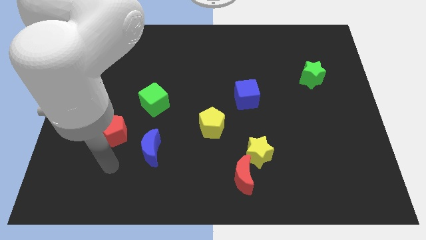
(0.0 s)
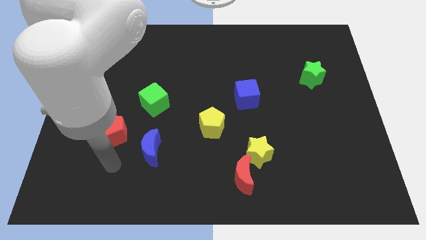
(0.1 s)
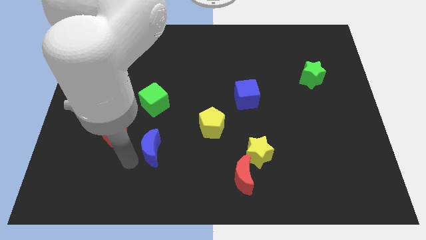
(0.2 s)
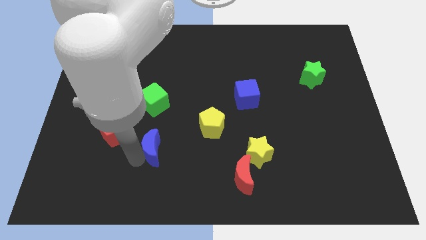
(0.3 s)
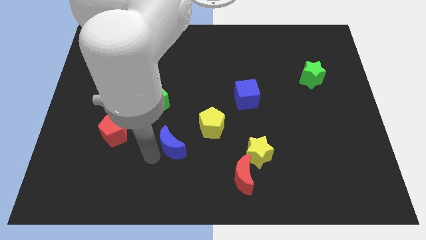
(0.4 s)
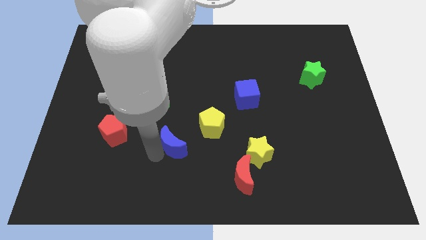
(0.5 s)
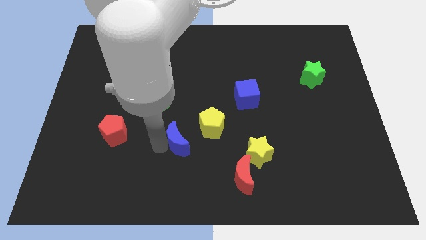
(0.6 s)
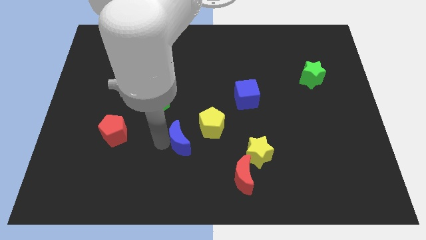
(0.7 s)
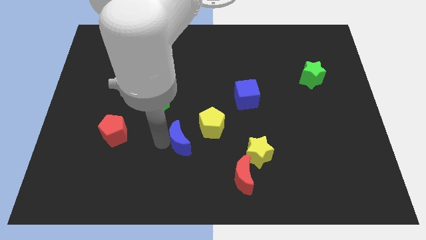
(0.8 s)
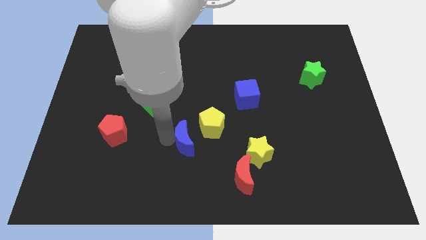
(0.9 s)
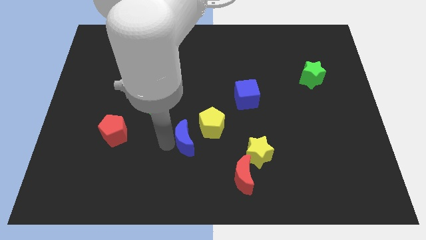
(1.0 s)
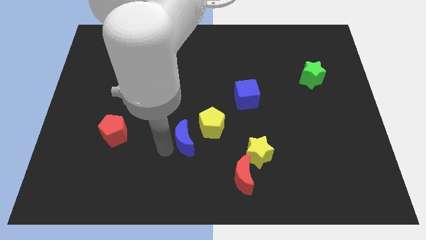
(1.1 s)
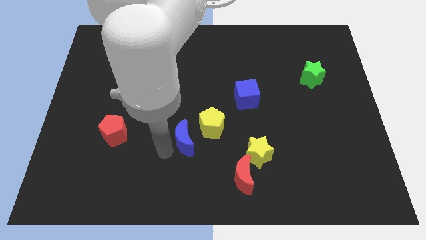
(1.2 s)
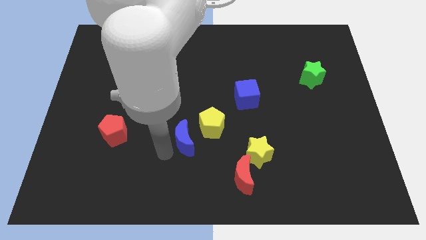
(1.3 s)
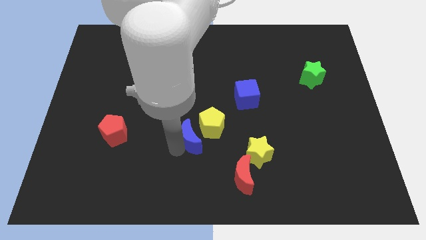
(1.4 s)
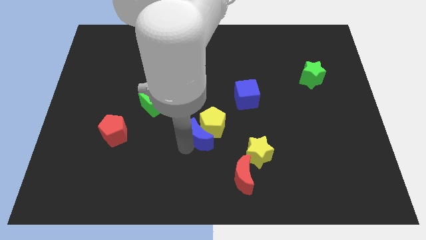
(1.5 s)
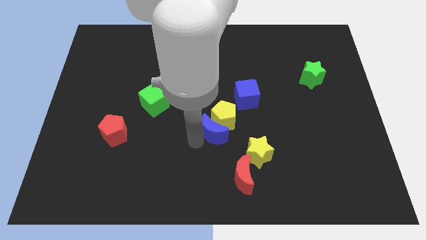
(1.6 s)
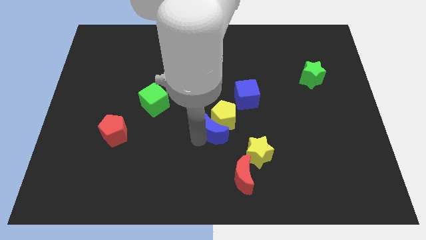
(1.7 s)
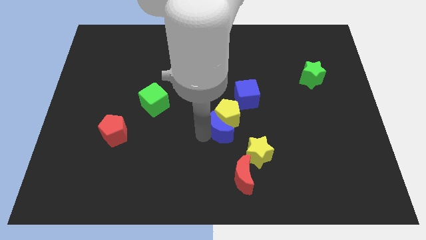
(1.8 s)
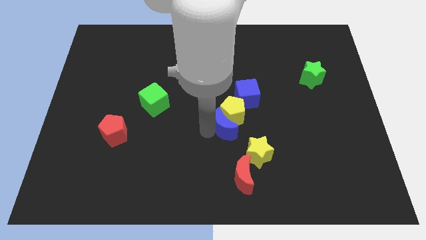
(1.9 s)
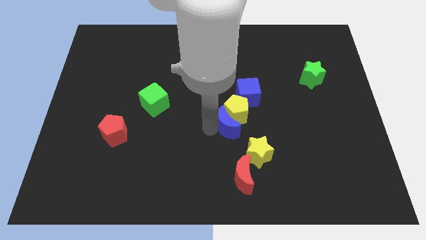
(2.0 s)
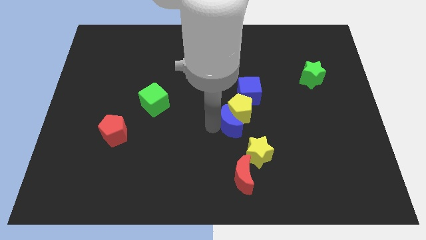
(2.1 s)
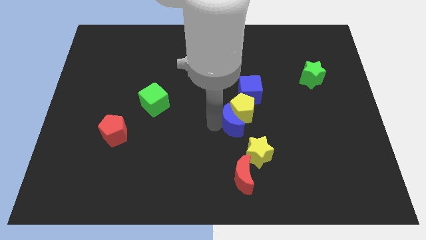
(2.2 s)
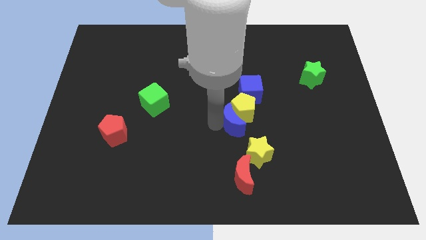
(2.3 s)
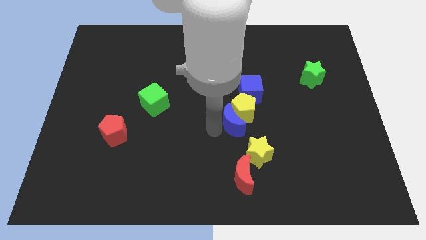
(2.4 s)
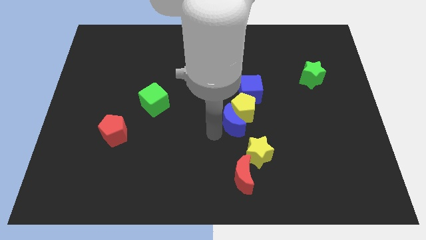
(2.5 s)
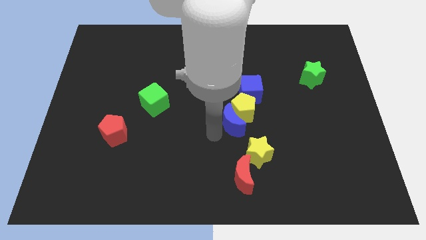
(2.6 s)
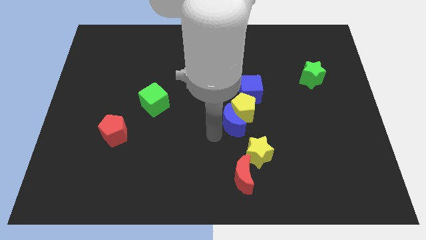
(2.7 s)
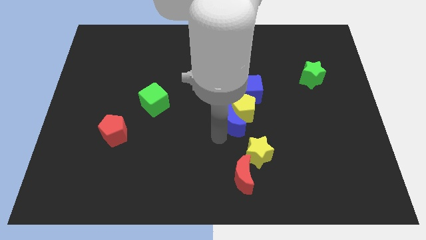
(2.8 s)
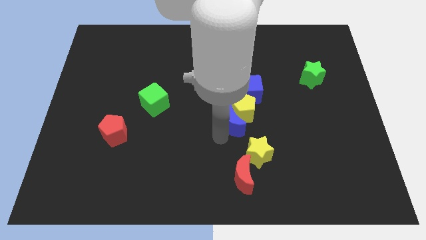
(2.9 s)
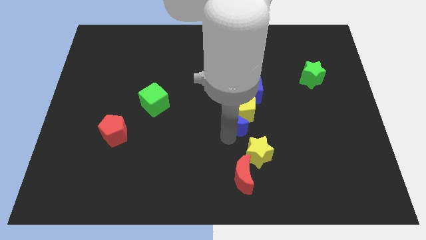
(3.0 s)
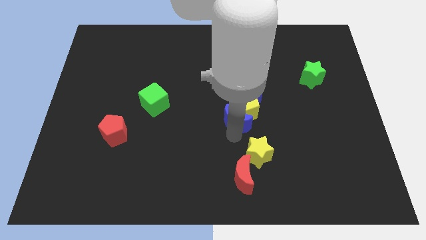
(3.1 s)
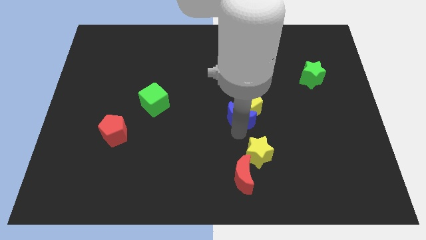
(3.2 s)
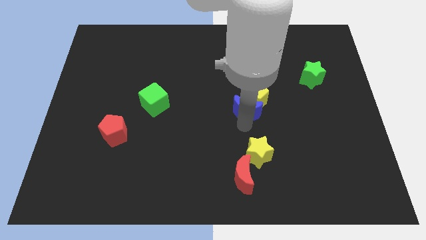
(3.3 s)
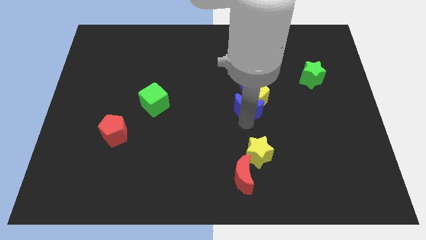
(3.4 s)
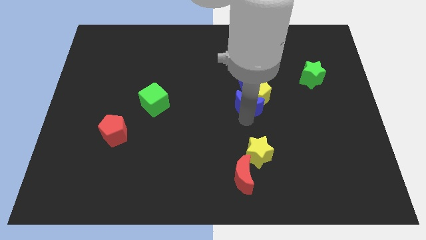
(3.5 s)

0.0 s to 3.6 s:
push the yellow pentagon and blue moon into the blue cube

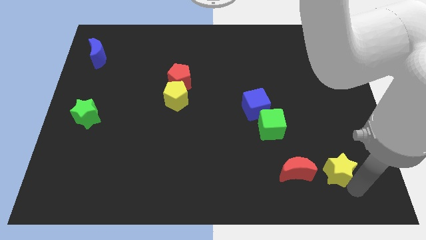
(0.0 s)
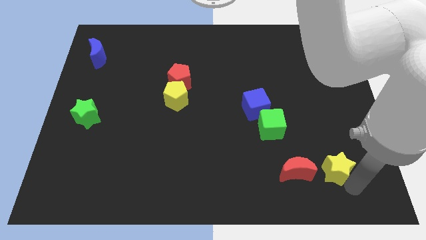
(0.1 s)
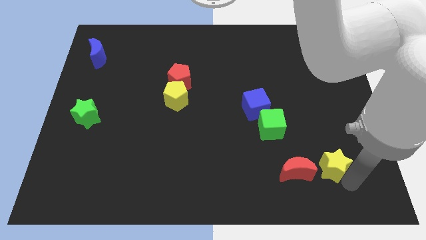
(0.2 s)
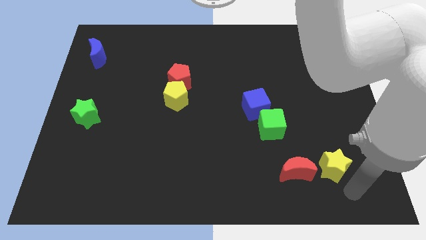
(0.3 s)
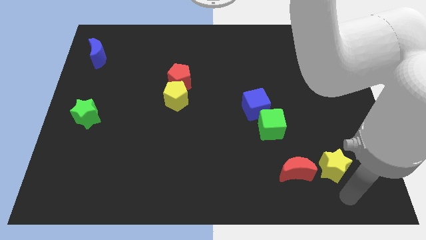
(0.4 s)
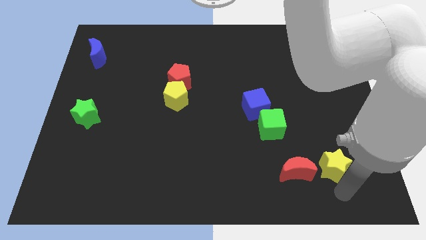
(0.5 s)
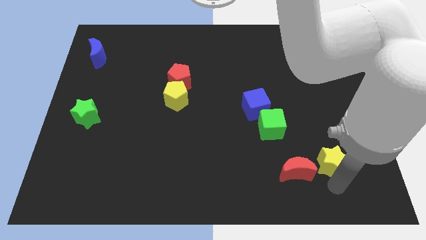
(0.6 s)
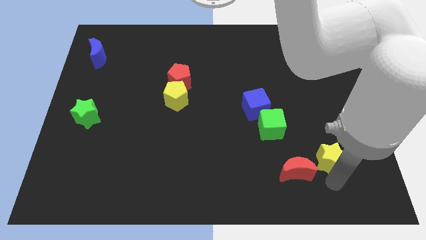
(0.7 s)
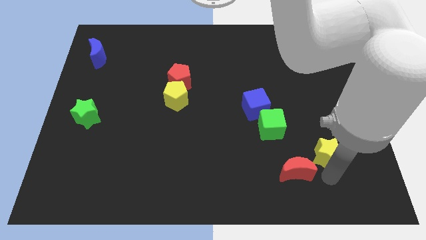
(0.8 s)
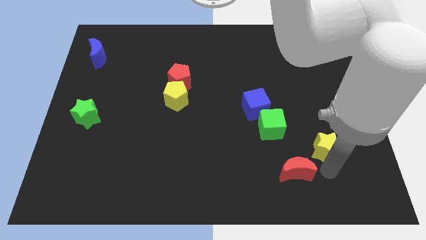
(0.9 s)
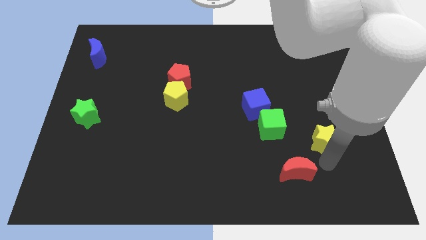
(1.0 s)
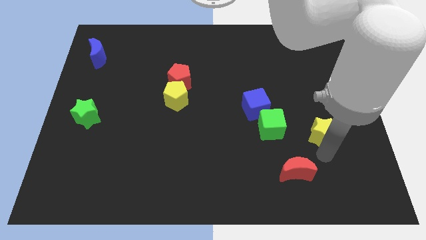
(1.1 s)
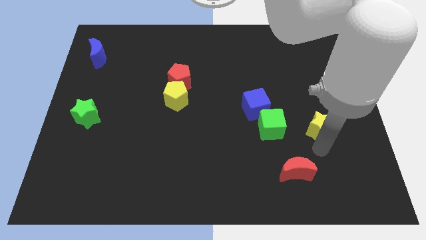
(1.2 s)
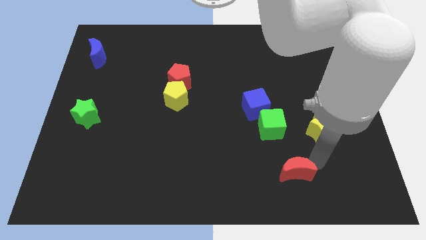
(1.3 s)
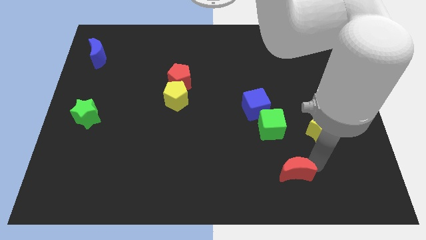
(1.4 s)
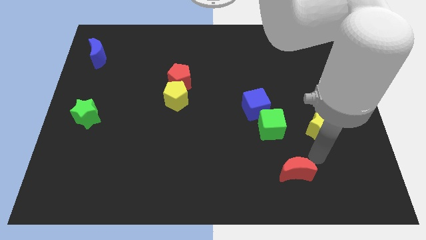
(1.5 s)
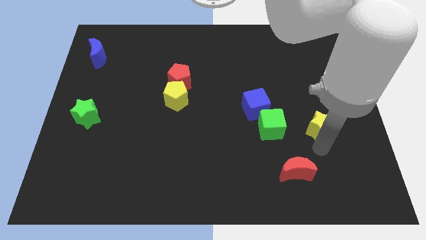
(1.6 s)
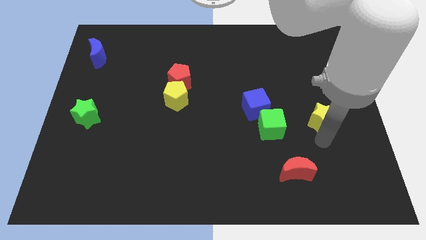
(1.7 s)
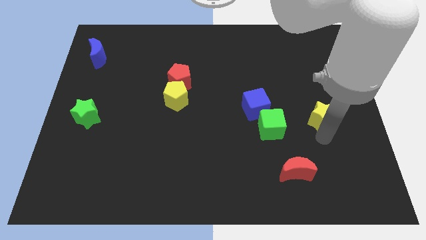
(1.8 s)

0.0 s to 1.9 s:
slide the yellow star to the right side of the green cube

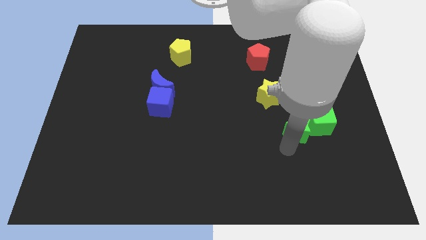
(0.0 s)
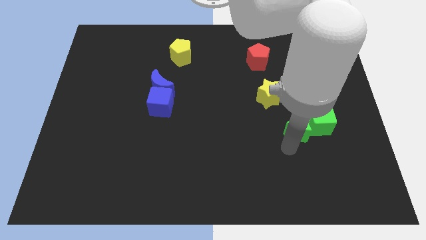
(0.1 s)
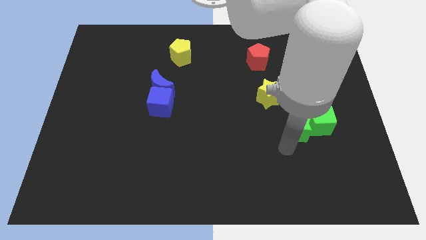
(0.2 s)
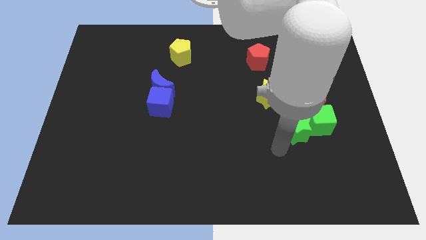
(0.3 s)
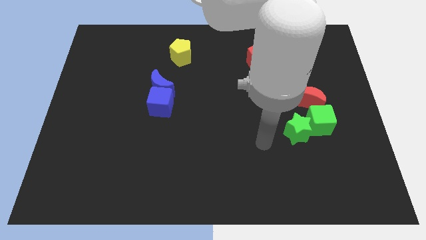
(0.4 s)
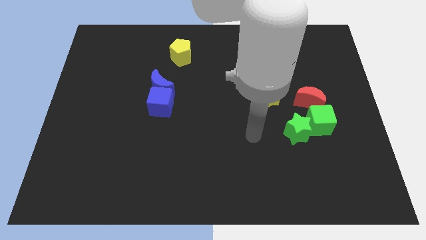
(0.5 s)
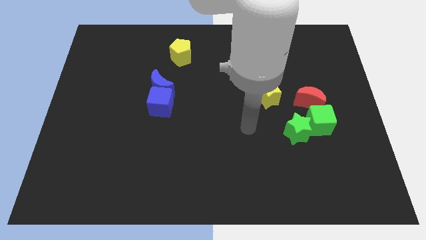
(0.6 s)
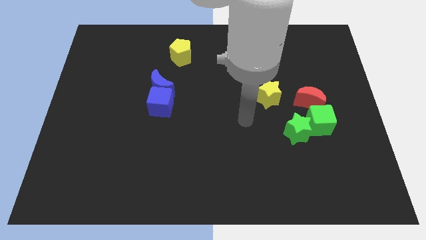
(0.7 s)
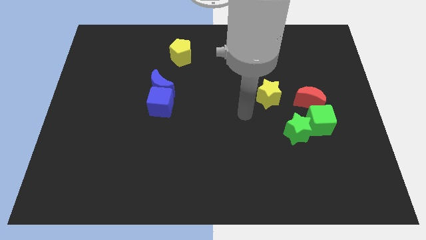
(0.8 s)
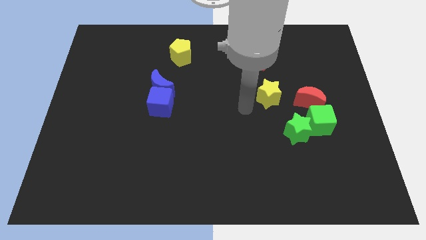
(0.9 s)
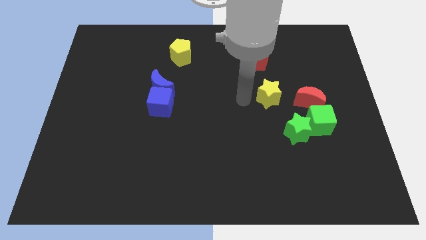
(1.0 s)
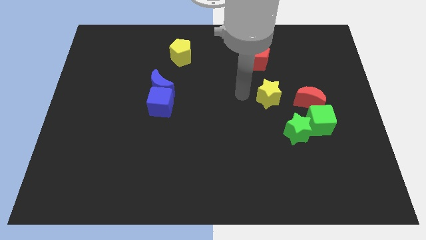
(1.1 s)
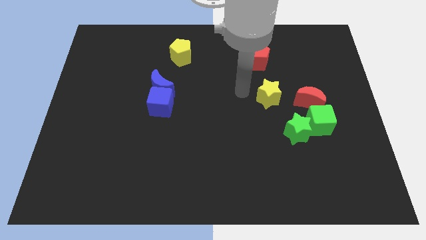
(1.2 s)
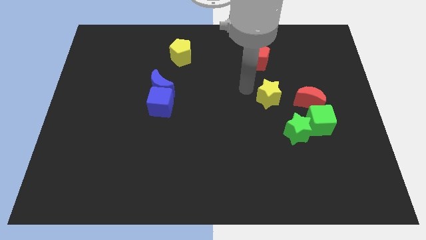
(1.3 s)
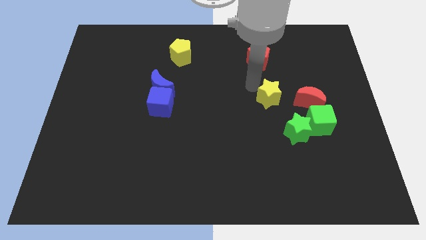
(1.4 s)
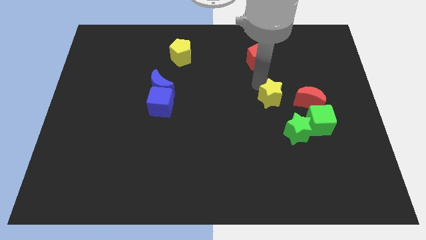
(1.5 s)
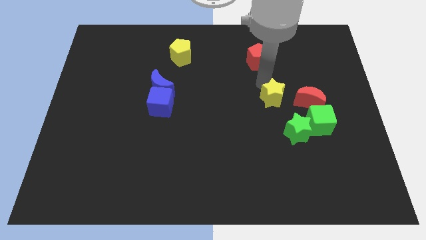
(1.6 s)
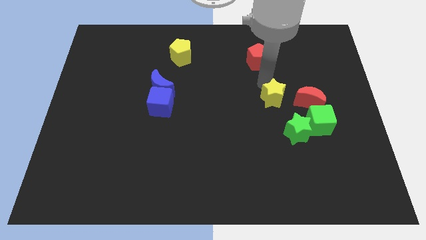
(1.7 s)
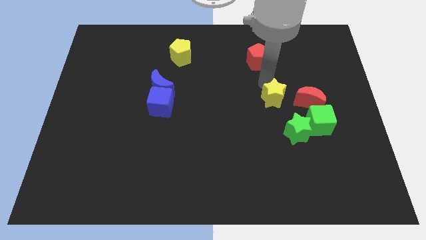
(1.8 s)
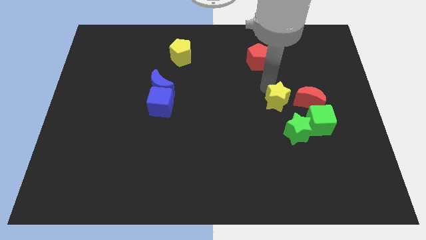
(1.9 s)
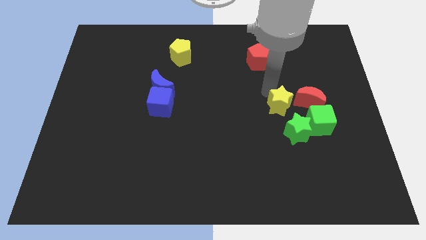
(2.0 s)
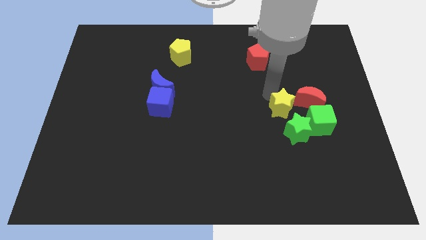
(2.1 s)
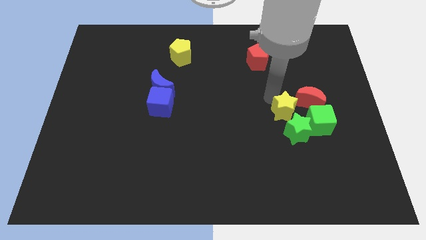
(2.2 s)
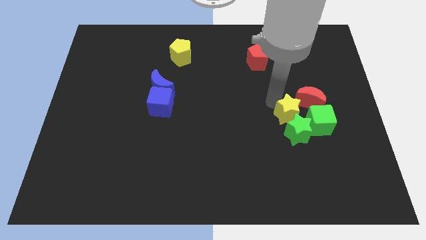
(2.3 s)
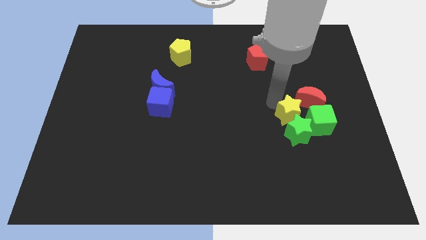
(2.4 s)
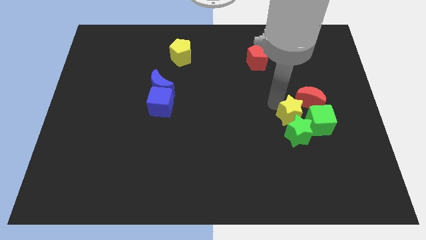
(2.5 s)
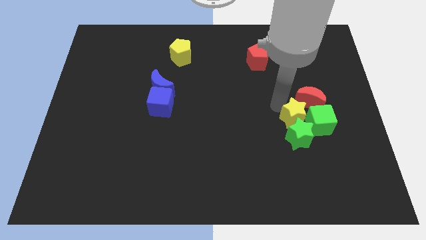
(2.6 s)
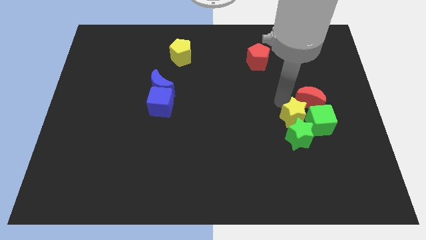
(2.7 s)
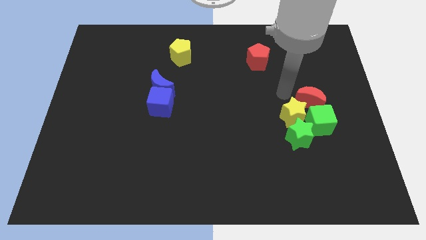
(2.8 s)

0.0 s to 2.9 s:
push the yellow star towards the green star

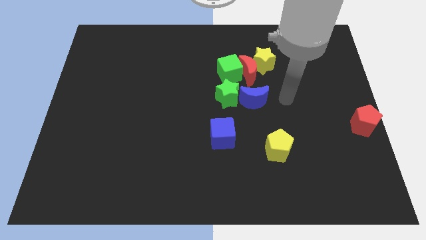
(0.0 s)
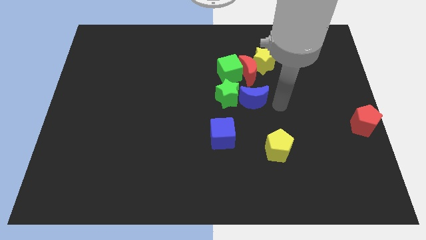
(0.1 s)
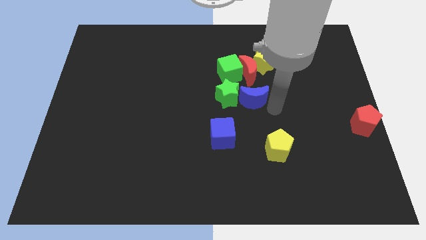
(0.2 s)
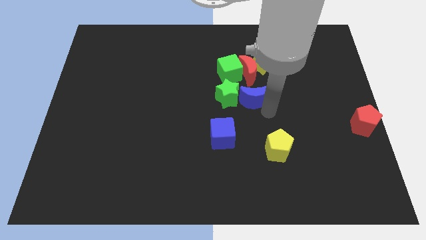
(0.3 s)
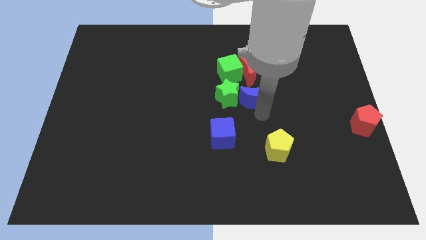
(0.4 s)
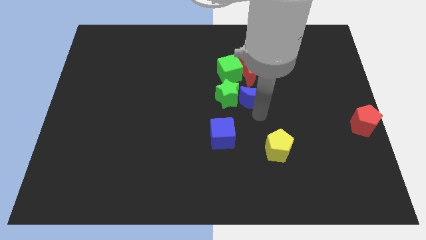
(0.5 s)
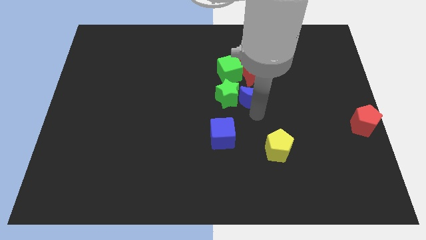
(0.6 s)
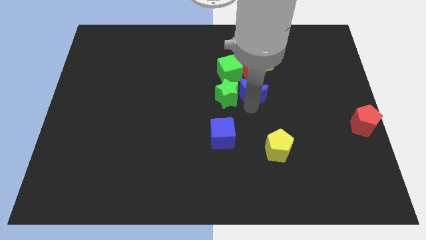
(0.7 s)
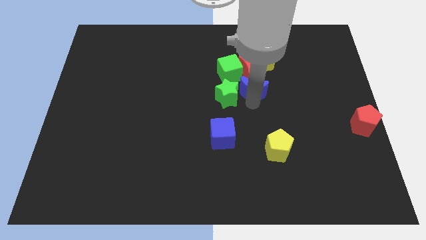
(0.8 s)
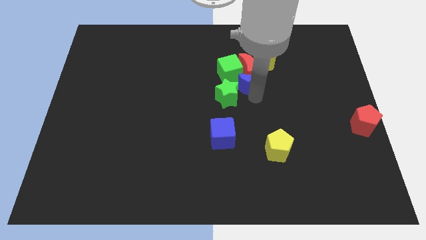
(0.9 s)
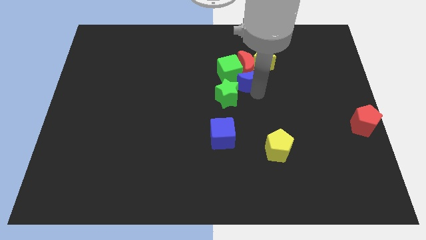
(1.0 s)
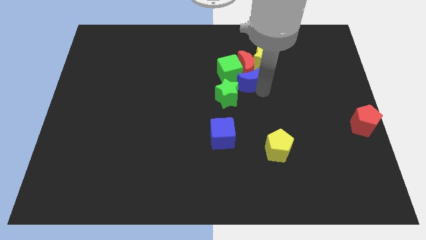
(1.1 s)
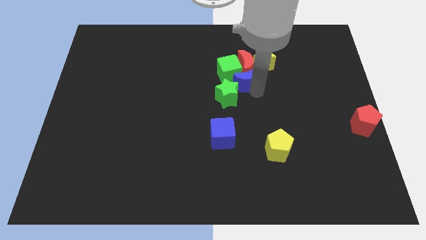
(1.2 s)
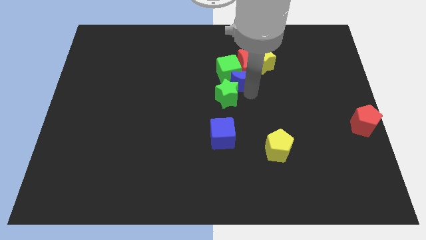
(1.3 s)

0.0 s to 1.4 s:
push the blue crescent into the green cube and red crescent
